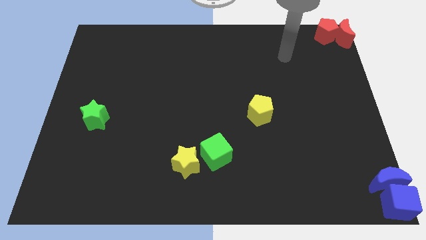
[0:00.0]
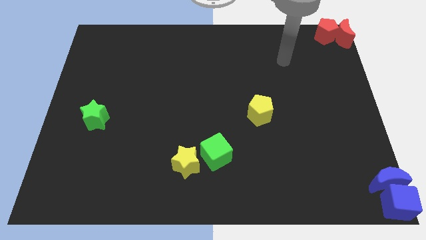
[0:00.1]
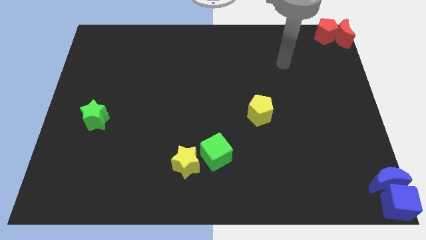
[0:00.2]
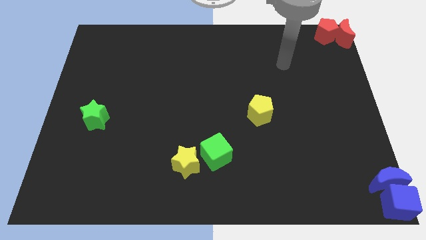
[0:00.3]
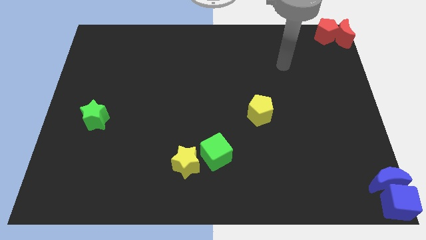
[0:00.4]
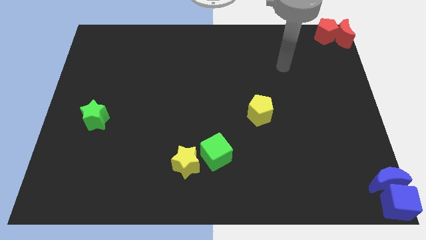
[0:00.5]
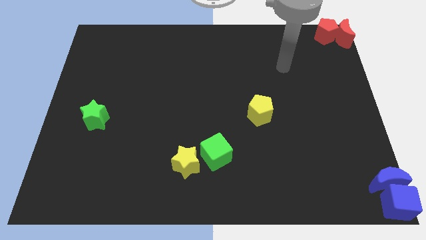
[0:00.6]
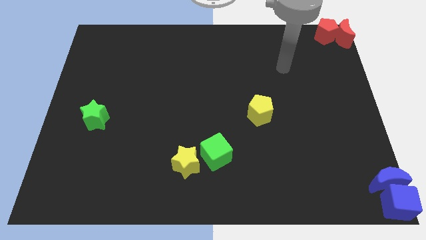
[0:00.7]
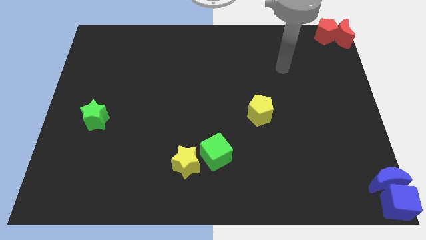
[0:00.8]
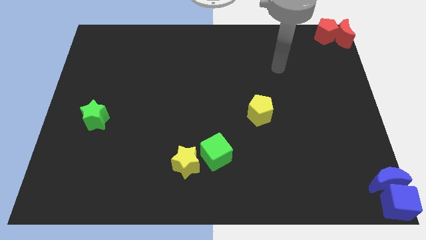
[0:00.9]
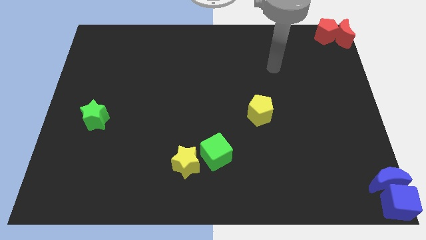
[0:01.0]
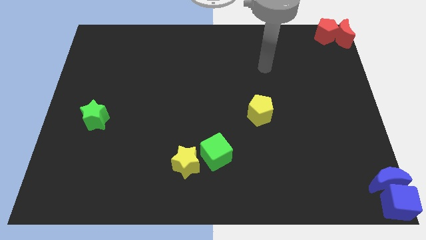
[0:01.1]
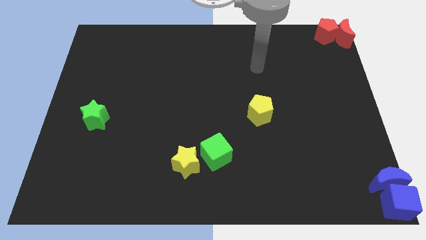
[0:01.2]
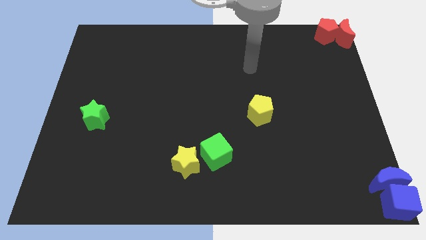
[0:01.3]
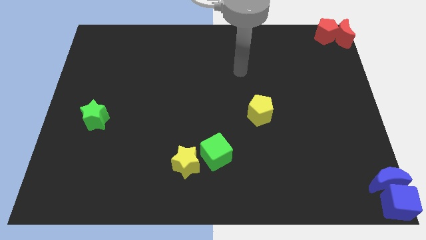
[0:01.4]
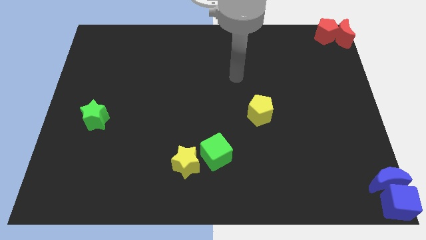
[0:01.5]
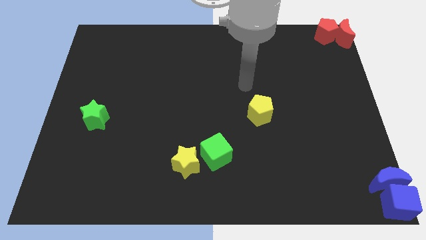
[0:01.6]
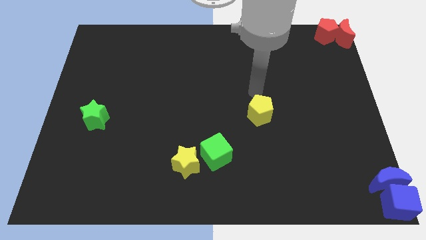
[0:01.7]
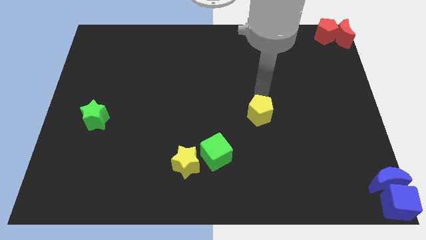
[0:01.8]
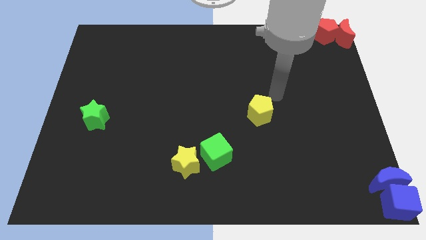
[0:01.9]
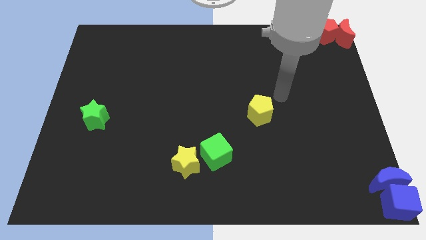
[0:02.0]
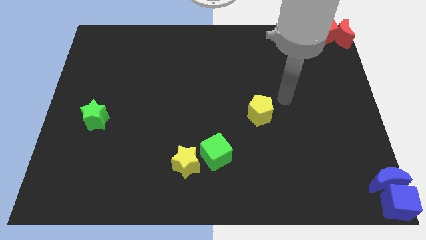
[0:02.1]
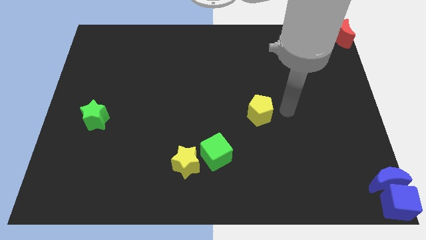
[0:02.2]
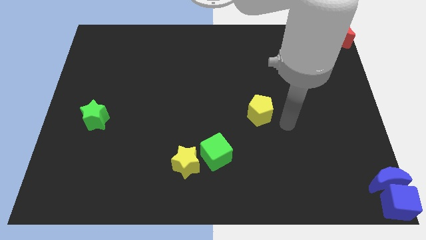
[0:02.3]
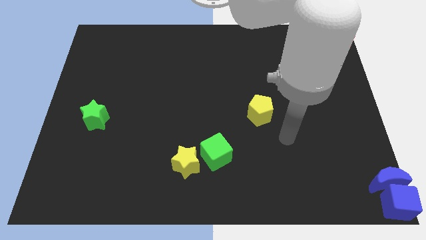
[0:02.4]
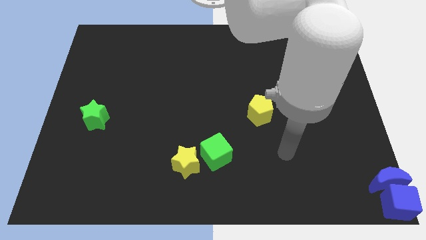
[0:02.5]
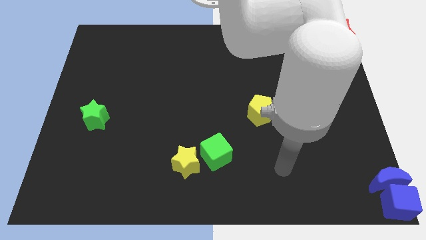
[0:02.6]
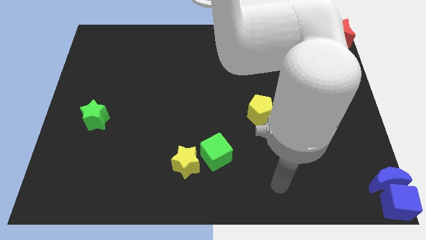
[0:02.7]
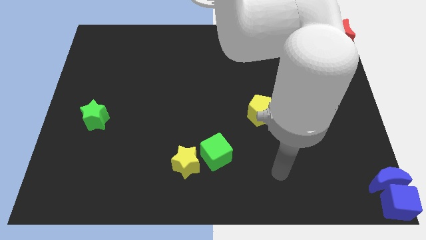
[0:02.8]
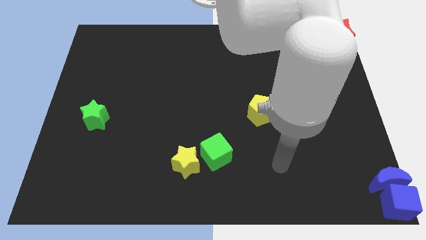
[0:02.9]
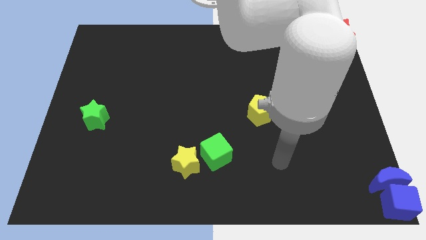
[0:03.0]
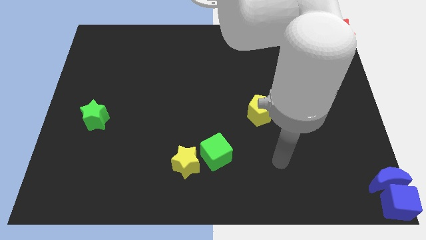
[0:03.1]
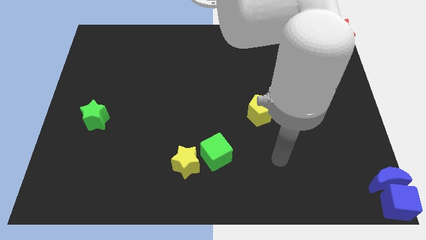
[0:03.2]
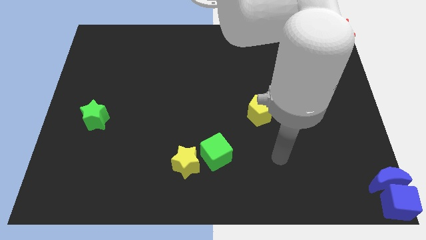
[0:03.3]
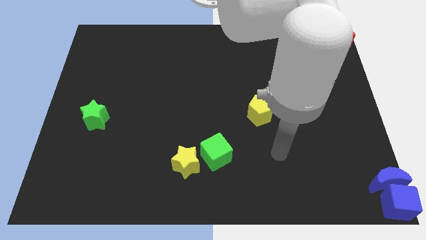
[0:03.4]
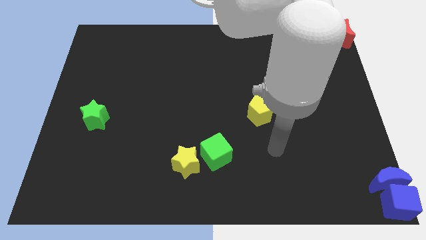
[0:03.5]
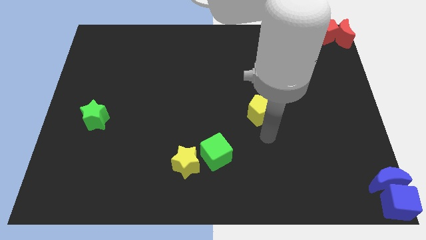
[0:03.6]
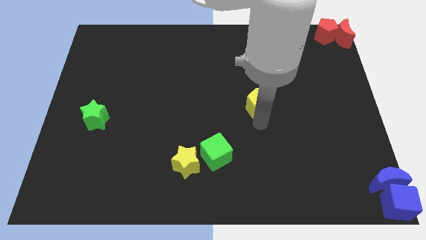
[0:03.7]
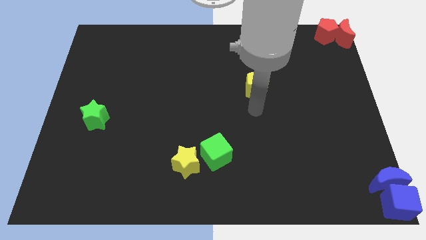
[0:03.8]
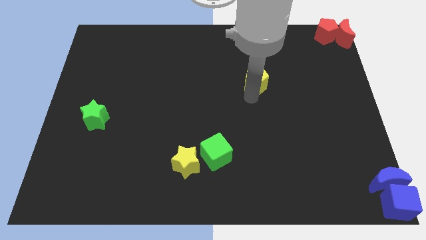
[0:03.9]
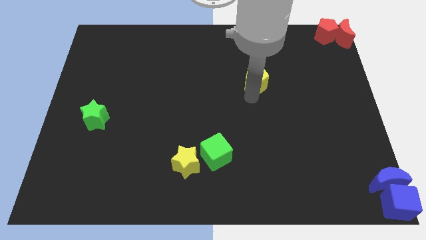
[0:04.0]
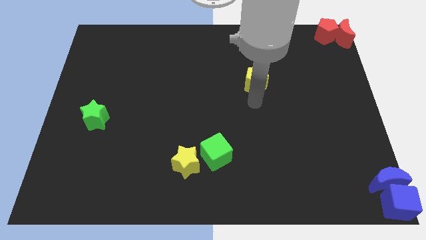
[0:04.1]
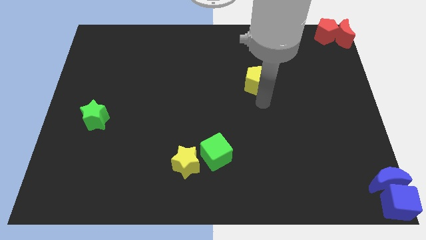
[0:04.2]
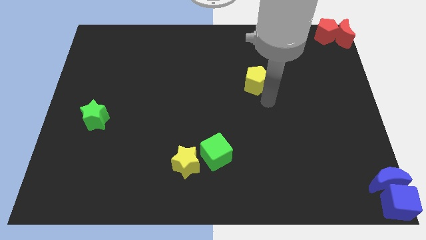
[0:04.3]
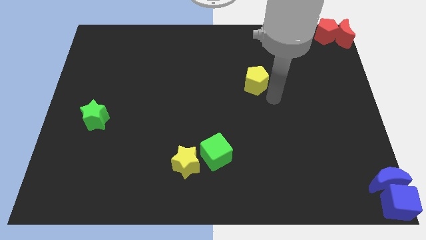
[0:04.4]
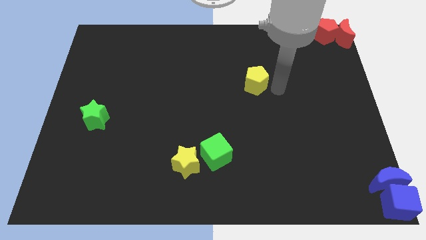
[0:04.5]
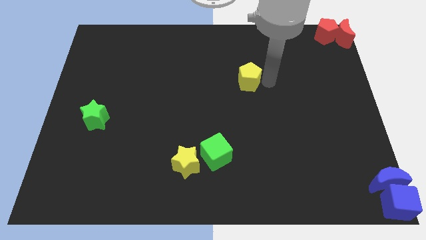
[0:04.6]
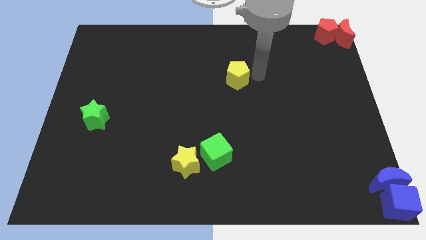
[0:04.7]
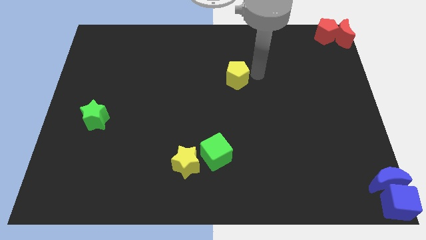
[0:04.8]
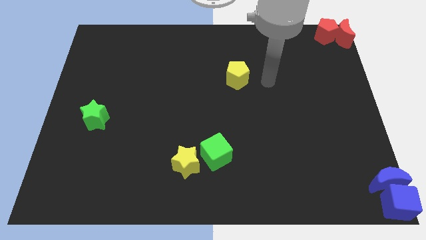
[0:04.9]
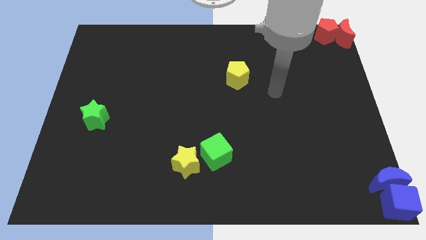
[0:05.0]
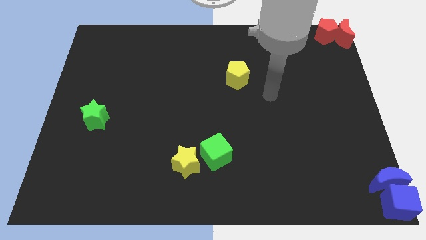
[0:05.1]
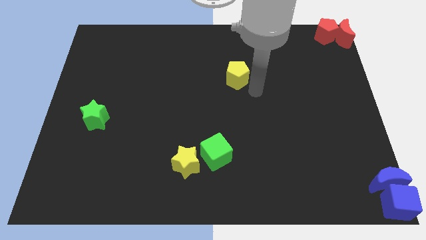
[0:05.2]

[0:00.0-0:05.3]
move the yellow pentagon to the center of the board

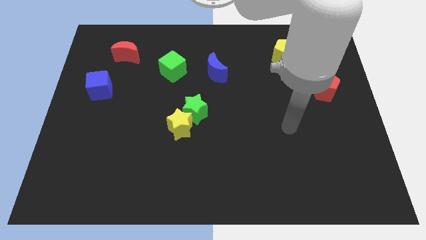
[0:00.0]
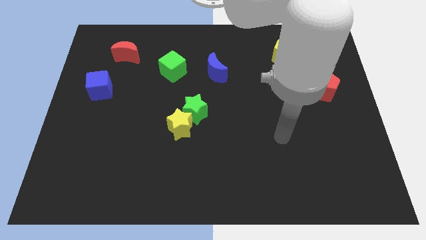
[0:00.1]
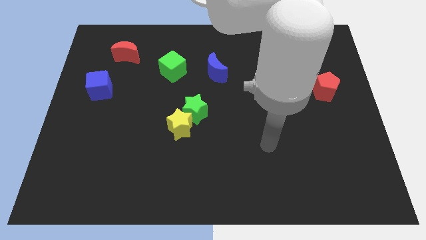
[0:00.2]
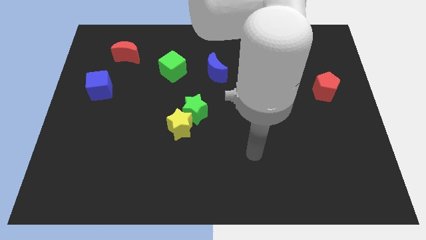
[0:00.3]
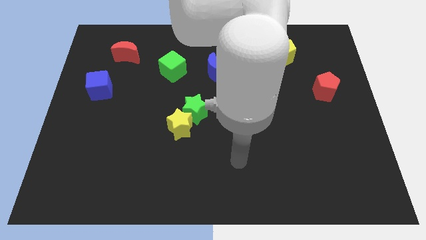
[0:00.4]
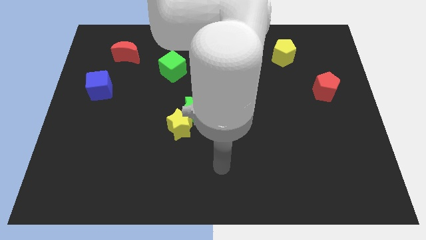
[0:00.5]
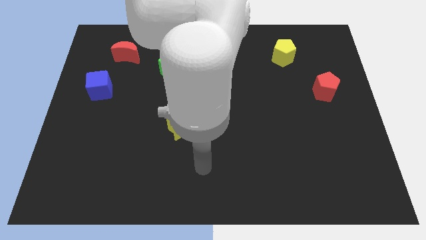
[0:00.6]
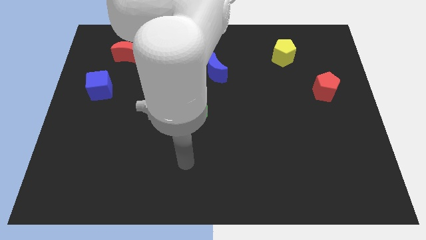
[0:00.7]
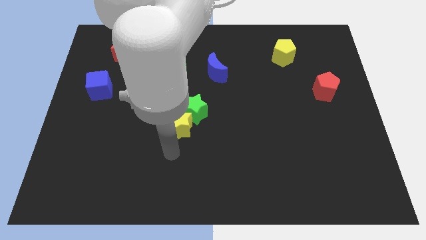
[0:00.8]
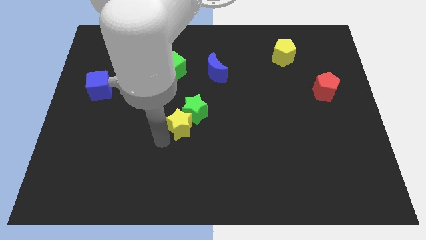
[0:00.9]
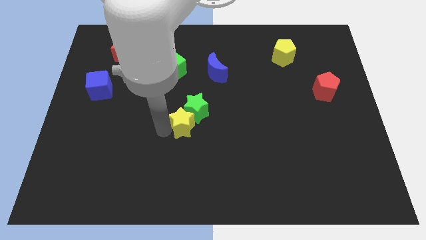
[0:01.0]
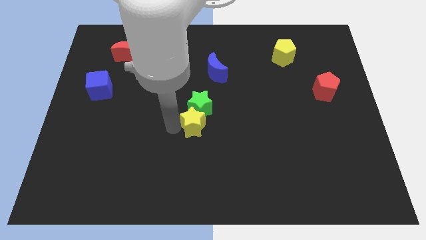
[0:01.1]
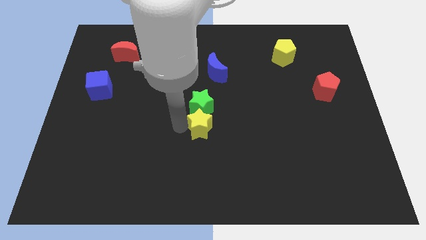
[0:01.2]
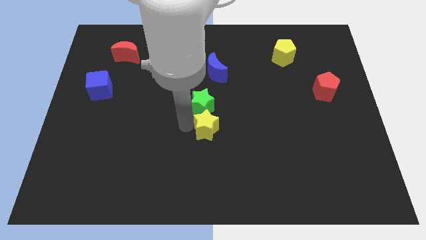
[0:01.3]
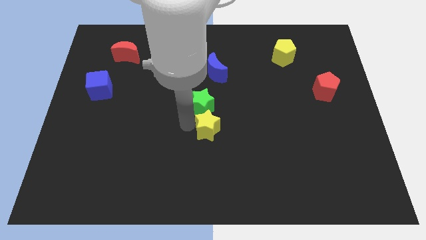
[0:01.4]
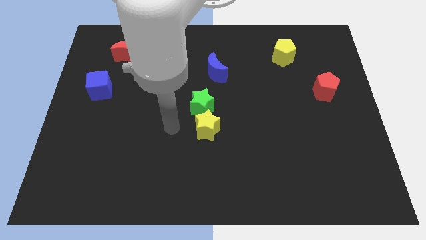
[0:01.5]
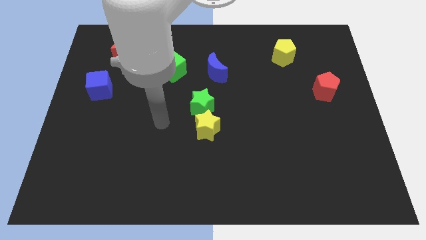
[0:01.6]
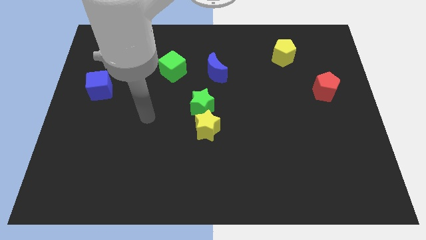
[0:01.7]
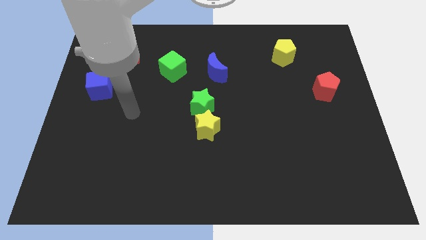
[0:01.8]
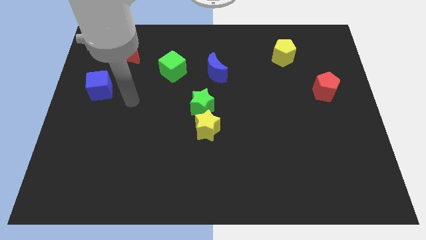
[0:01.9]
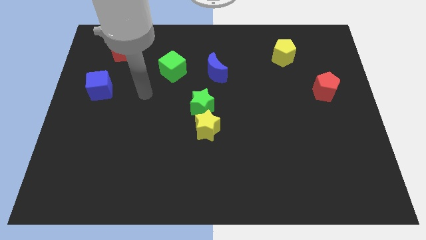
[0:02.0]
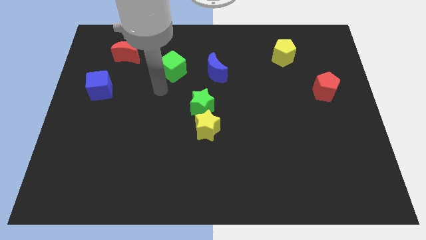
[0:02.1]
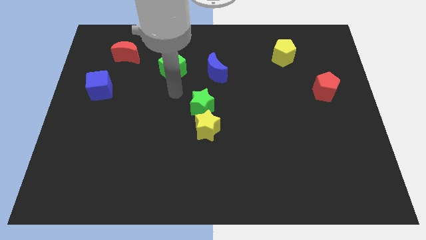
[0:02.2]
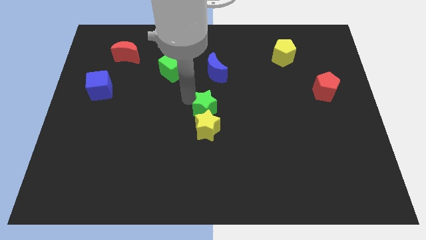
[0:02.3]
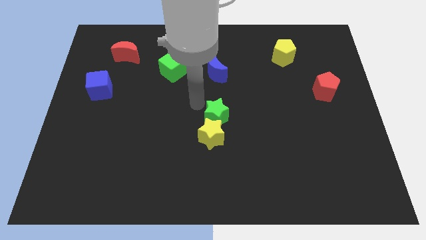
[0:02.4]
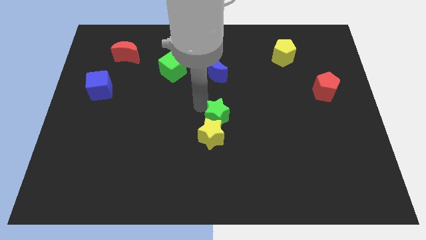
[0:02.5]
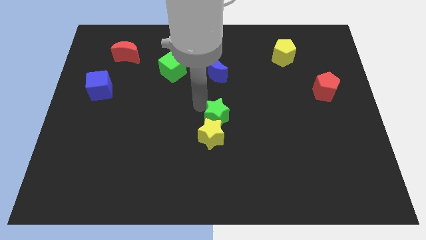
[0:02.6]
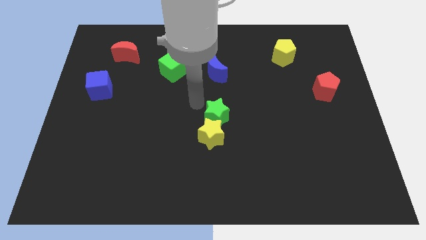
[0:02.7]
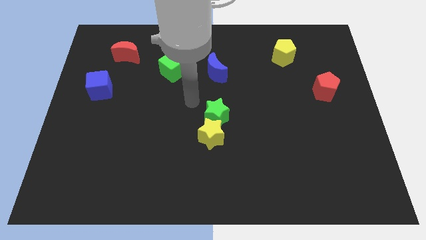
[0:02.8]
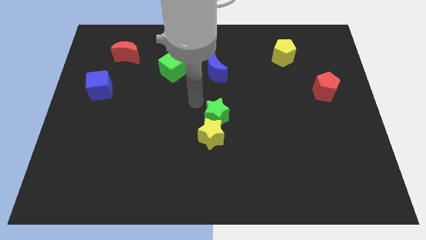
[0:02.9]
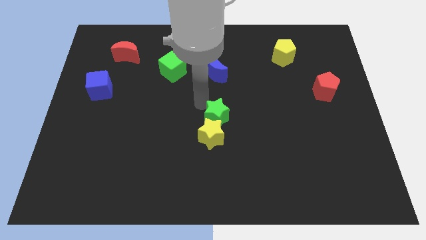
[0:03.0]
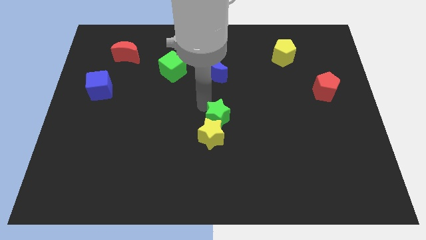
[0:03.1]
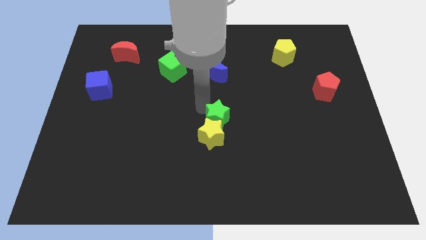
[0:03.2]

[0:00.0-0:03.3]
slightly push yellow and green star to the center

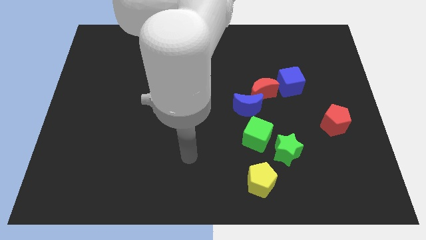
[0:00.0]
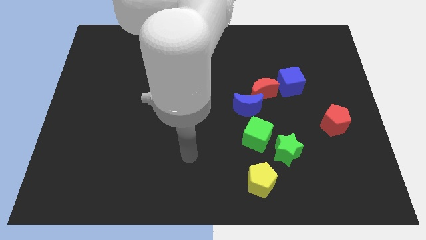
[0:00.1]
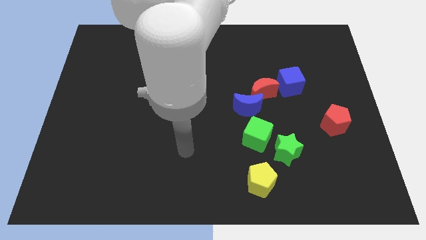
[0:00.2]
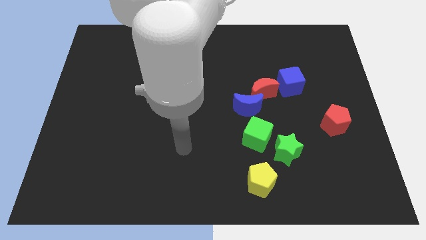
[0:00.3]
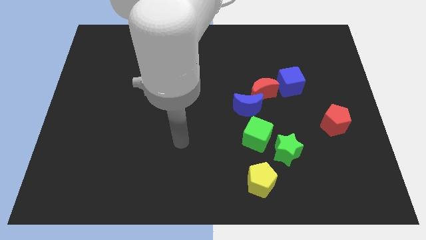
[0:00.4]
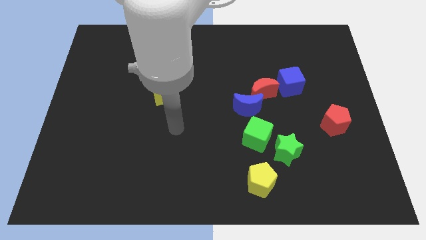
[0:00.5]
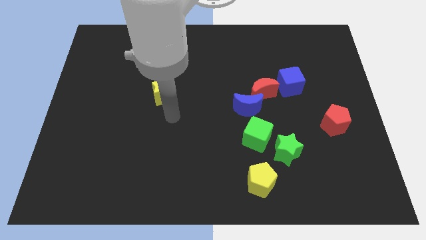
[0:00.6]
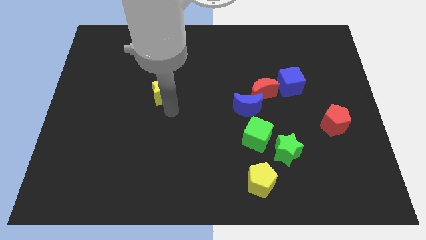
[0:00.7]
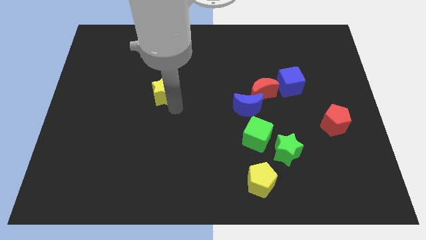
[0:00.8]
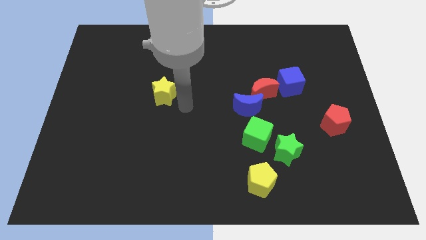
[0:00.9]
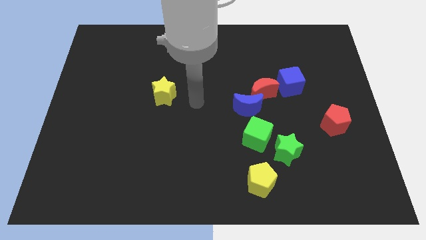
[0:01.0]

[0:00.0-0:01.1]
place your hand in between the yellow star and blue moon
